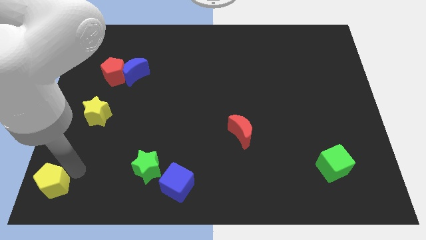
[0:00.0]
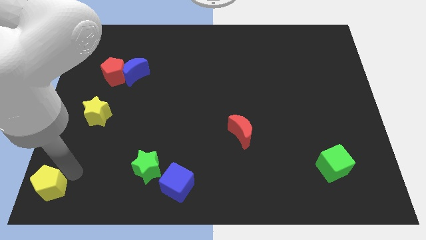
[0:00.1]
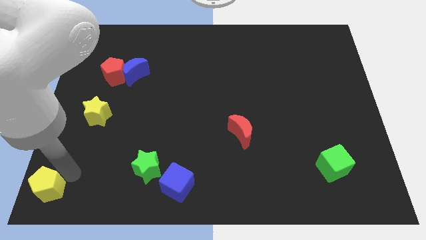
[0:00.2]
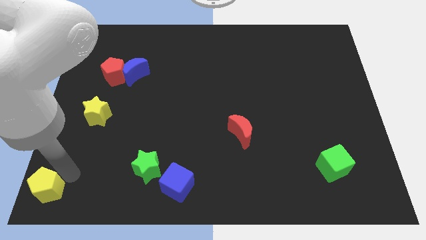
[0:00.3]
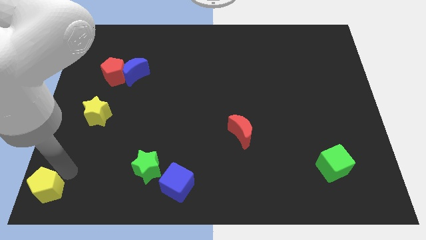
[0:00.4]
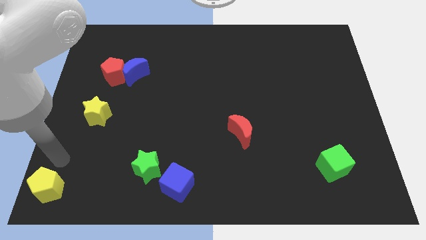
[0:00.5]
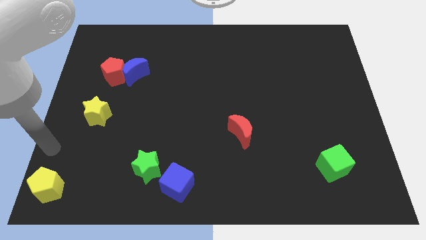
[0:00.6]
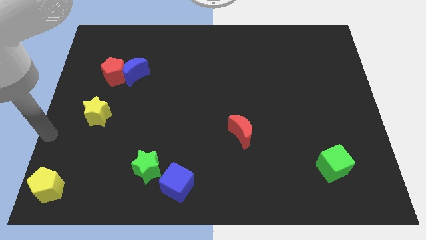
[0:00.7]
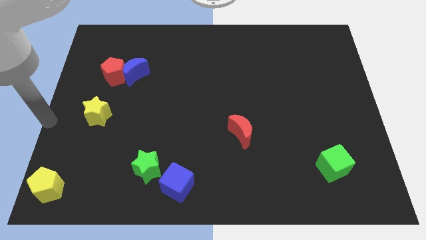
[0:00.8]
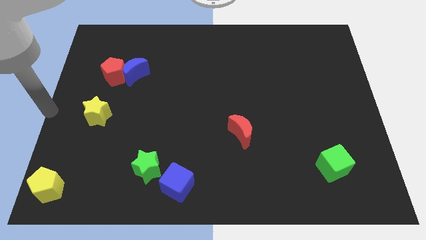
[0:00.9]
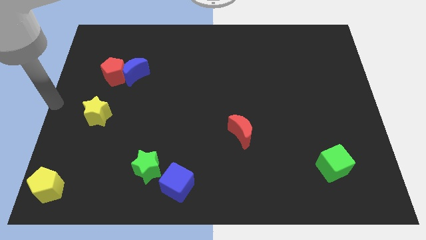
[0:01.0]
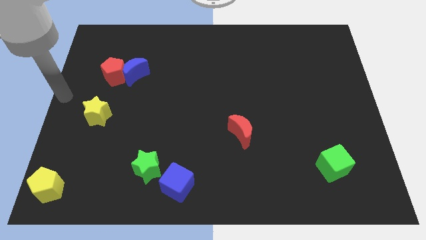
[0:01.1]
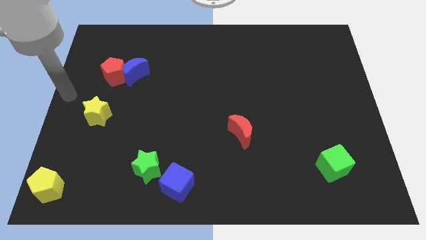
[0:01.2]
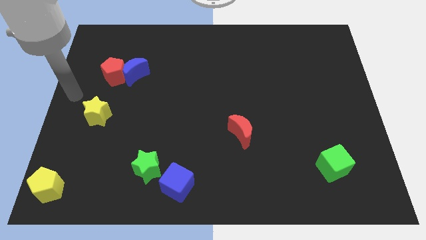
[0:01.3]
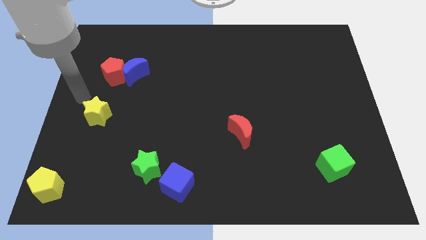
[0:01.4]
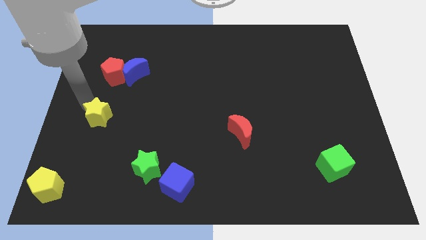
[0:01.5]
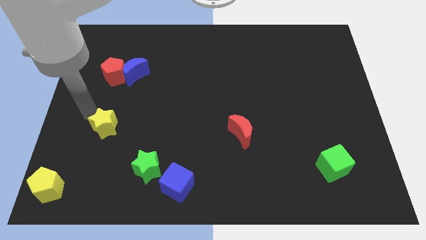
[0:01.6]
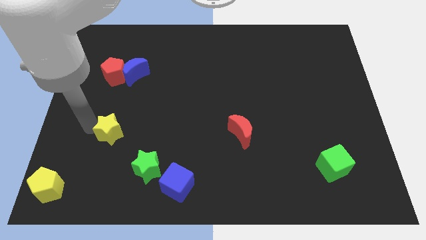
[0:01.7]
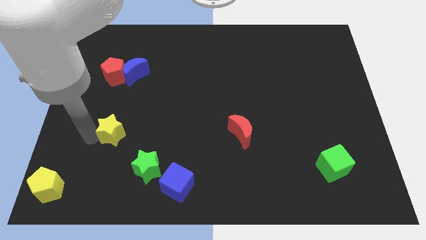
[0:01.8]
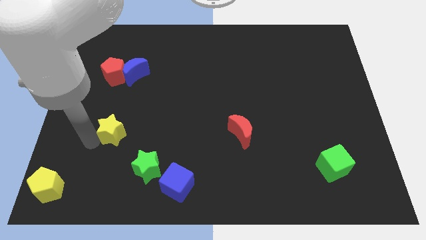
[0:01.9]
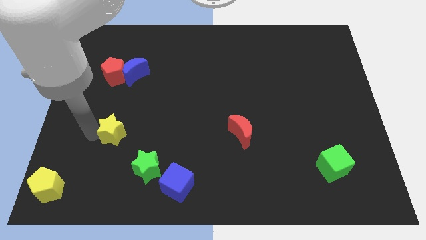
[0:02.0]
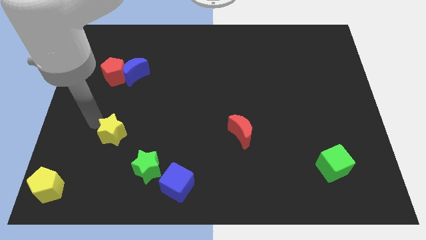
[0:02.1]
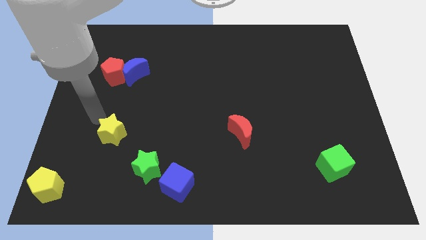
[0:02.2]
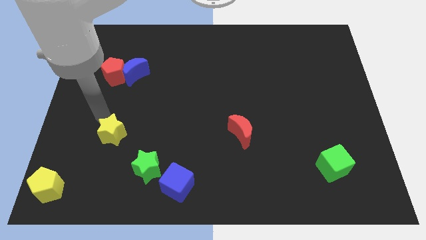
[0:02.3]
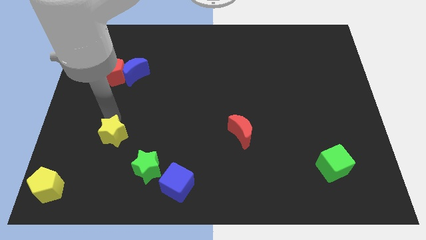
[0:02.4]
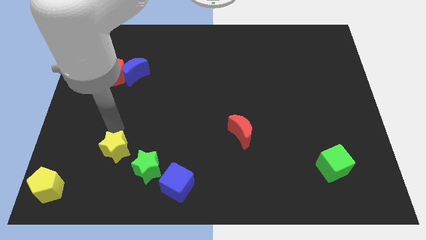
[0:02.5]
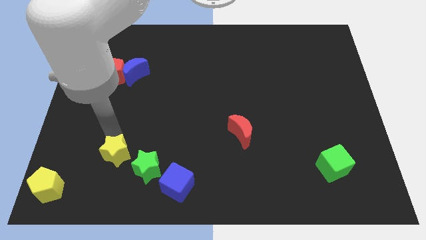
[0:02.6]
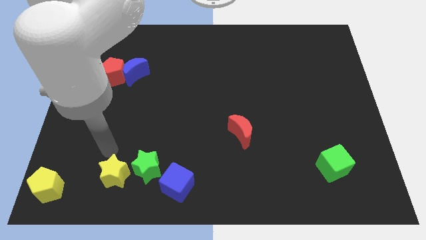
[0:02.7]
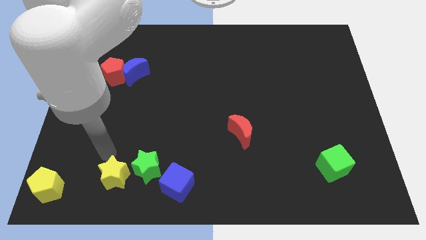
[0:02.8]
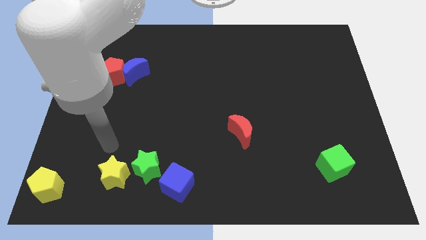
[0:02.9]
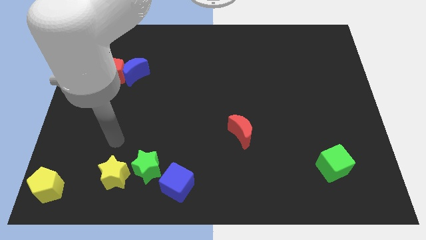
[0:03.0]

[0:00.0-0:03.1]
place yellow star to the left of green star

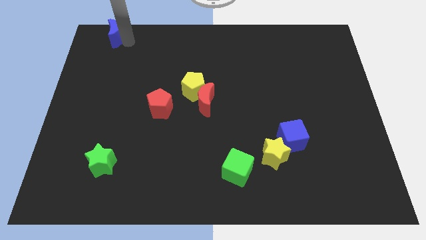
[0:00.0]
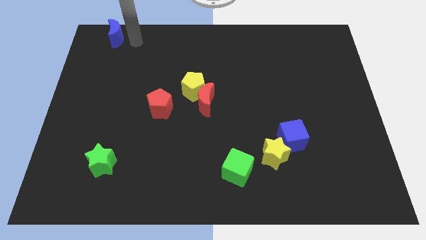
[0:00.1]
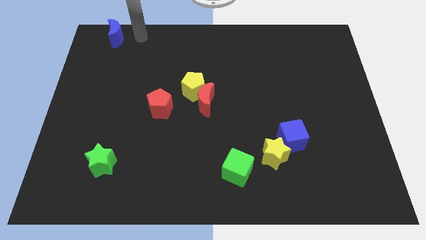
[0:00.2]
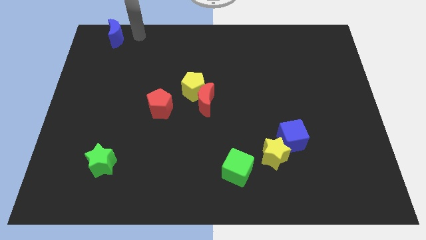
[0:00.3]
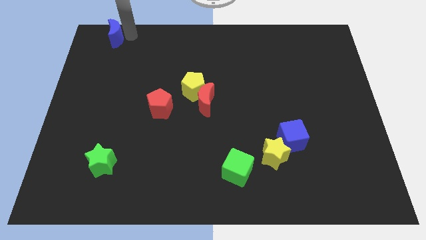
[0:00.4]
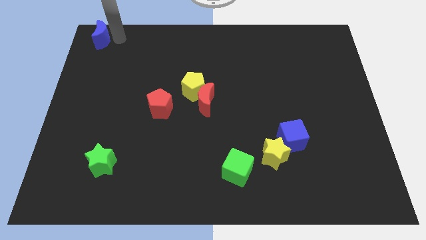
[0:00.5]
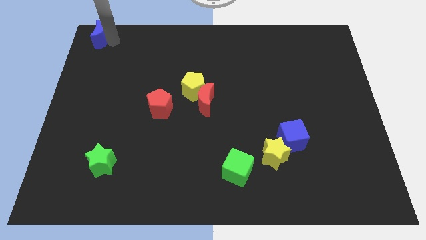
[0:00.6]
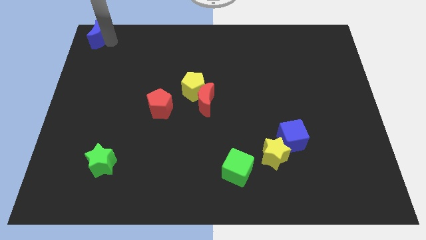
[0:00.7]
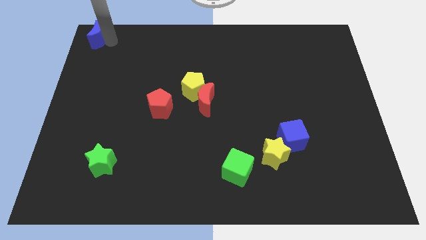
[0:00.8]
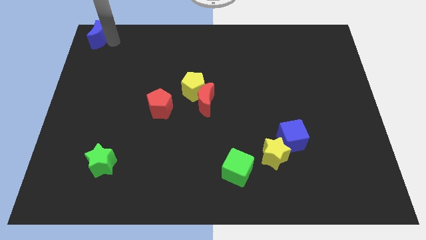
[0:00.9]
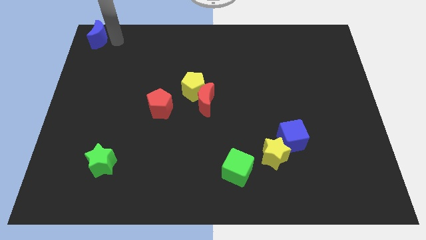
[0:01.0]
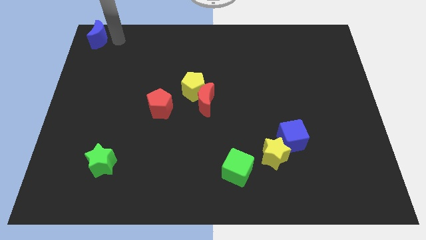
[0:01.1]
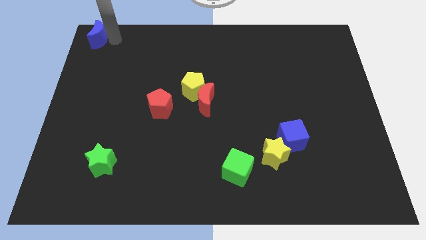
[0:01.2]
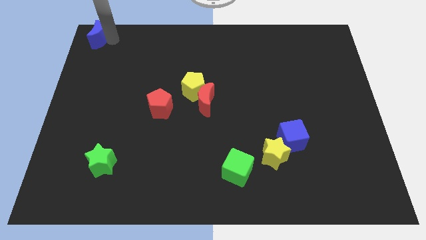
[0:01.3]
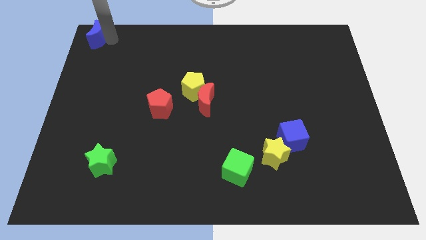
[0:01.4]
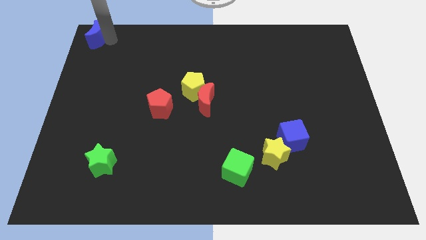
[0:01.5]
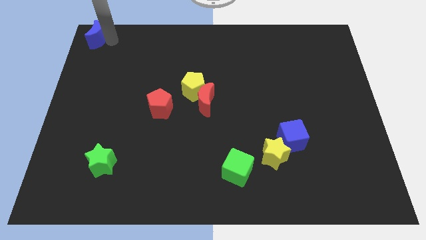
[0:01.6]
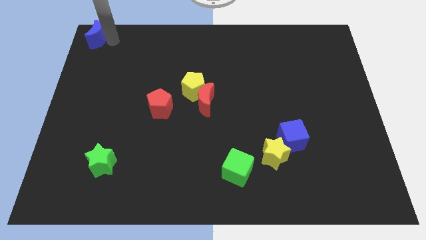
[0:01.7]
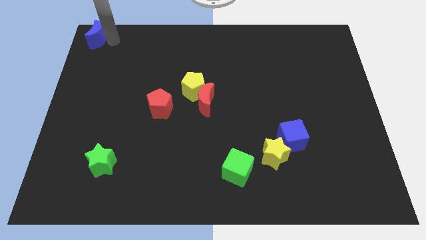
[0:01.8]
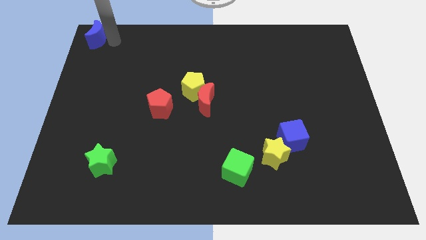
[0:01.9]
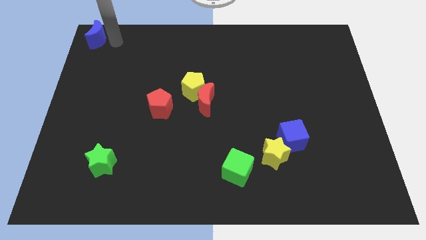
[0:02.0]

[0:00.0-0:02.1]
place blue moon to the top left of the board

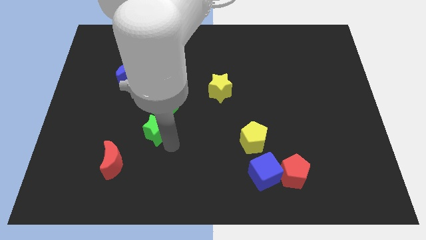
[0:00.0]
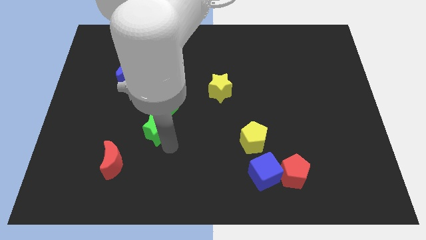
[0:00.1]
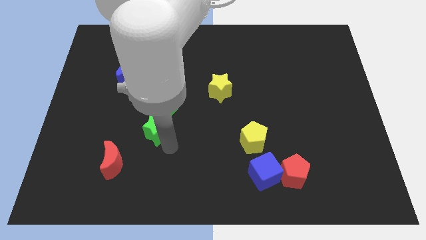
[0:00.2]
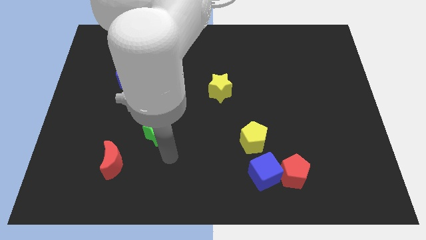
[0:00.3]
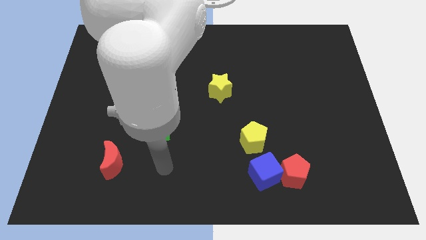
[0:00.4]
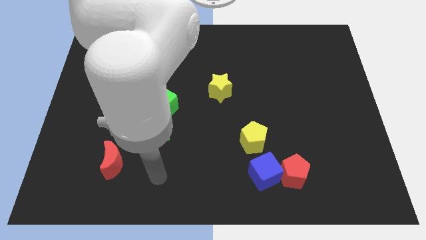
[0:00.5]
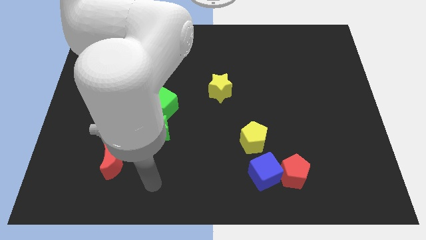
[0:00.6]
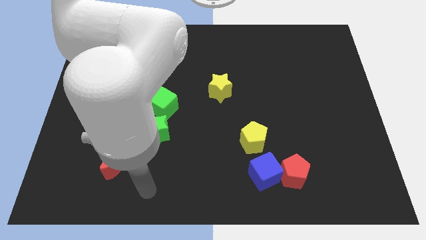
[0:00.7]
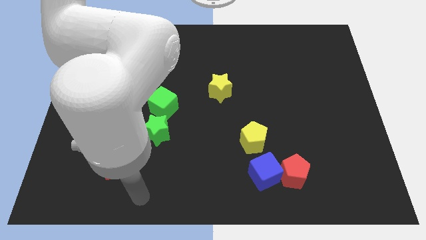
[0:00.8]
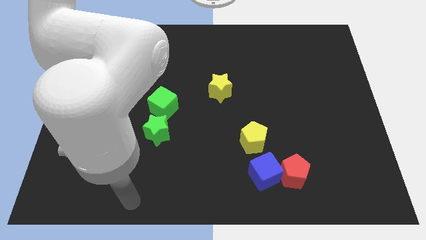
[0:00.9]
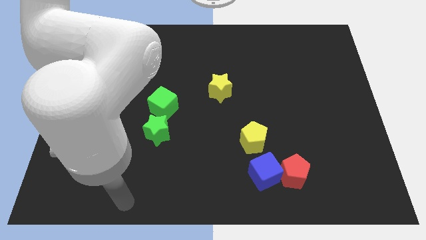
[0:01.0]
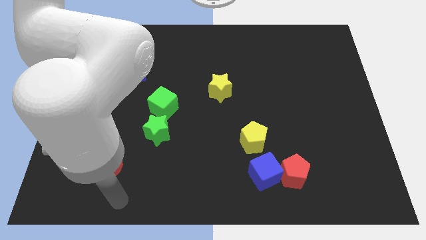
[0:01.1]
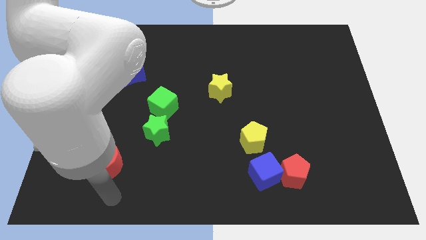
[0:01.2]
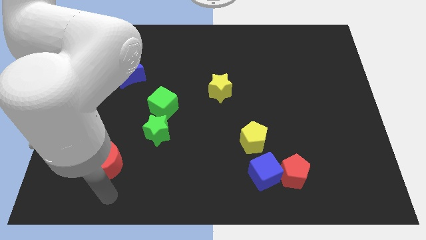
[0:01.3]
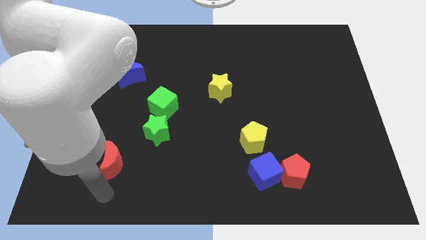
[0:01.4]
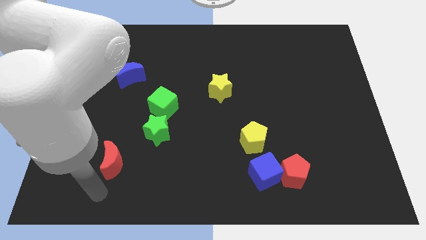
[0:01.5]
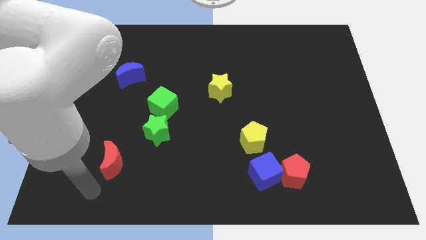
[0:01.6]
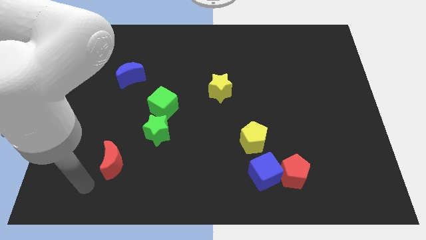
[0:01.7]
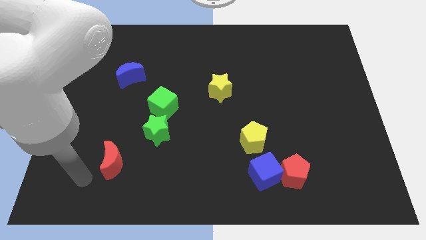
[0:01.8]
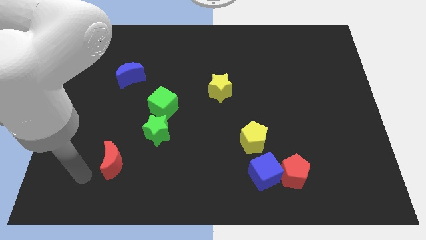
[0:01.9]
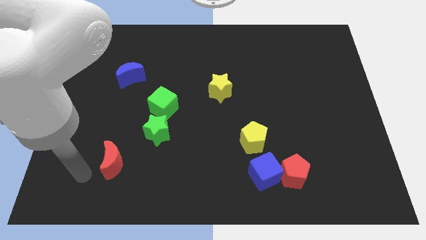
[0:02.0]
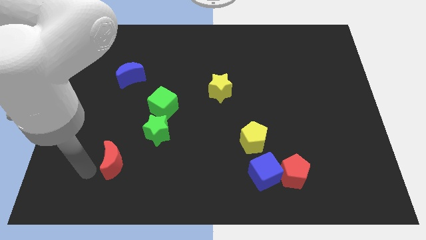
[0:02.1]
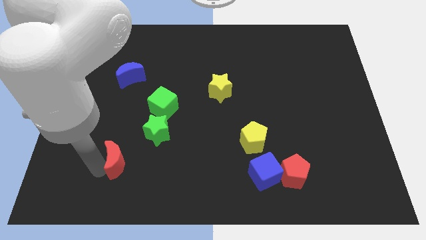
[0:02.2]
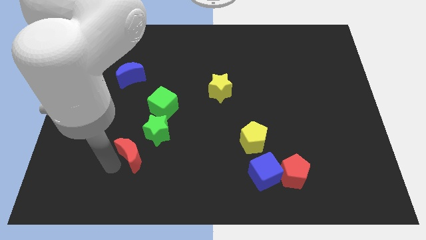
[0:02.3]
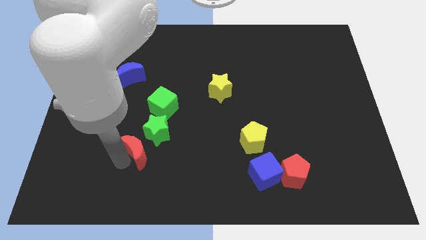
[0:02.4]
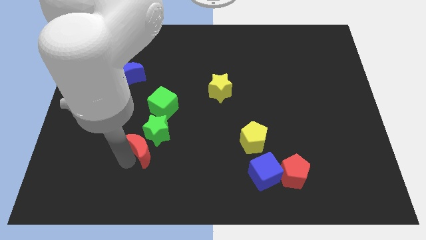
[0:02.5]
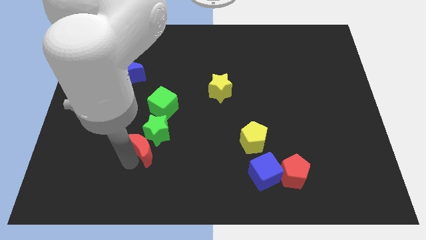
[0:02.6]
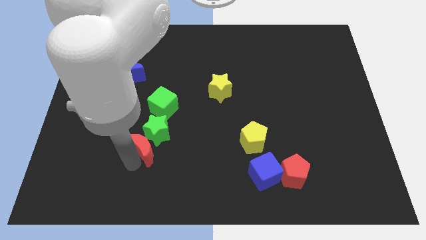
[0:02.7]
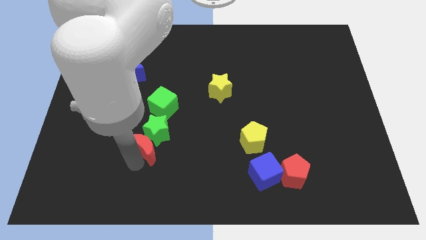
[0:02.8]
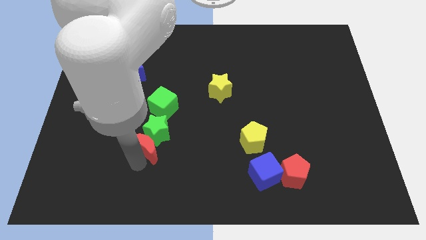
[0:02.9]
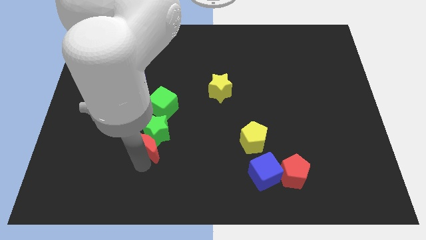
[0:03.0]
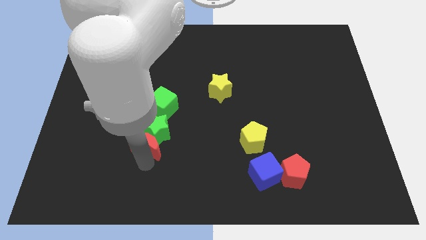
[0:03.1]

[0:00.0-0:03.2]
push the red moon closer to the green star

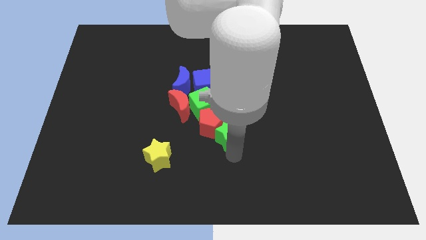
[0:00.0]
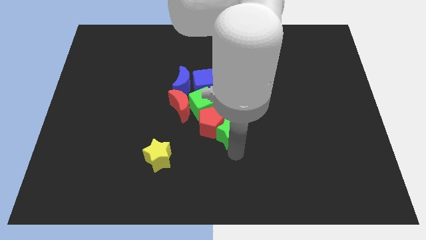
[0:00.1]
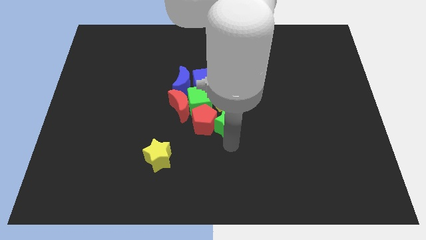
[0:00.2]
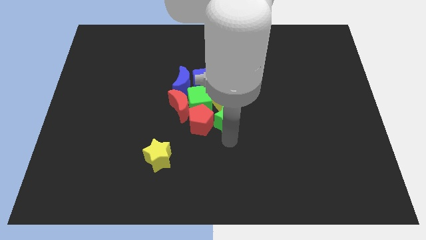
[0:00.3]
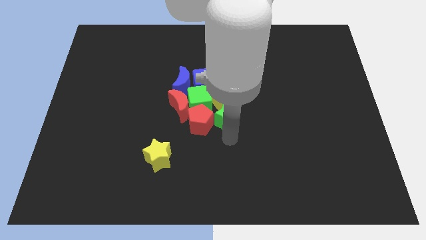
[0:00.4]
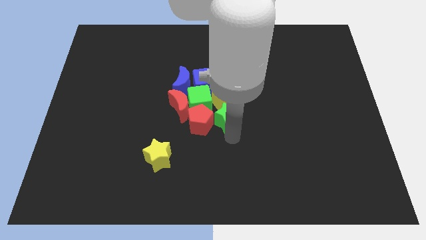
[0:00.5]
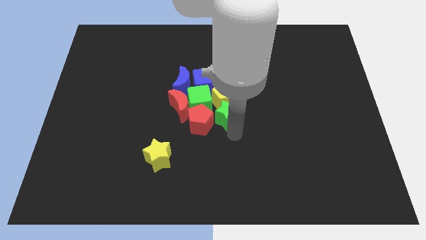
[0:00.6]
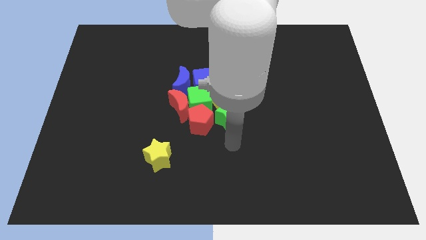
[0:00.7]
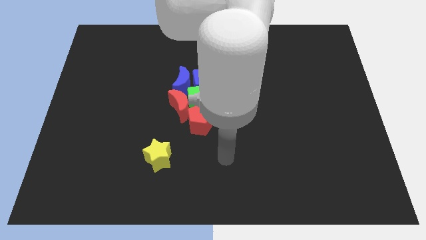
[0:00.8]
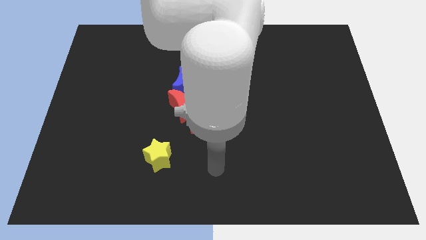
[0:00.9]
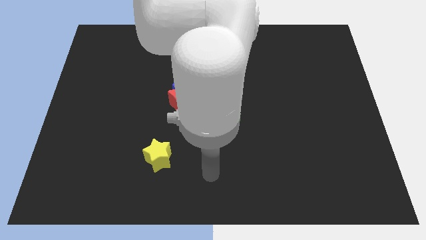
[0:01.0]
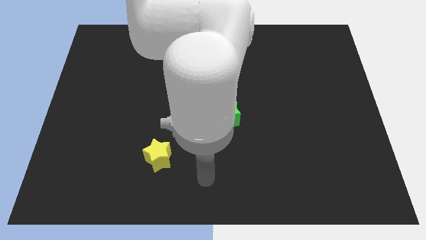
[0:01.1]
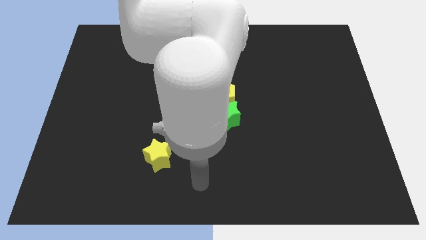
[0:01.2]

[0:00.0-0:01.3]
put the green star vertically below the yellow pentagon
